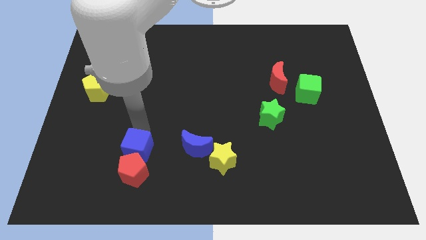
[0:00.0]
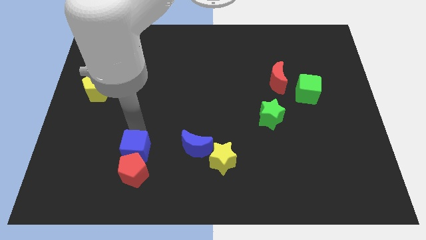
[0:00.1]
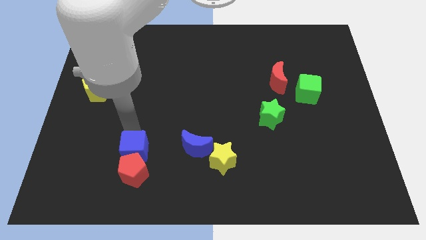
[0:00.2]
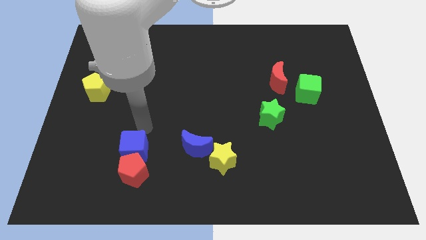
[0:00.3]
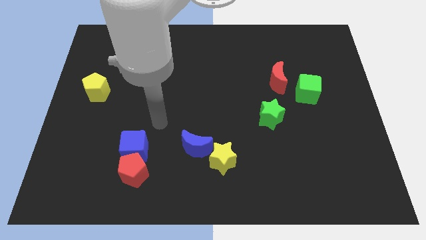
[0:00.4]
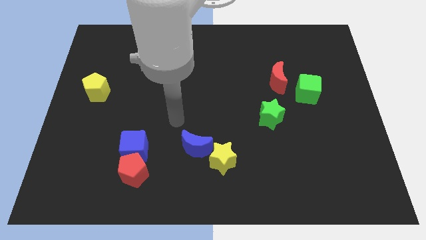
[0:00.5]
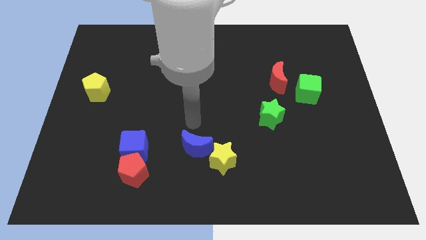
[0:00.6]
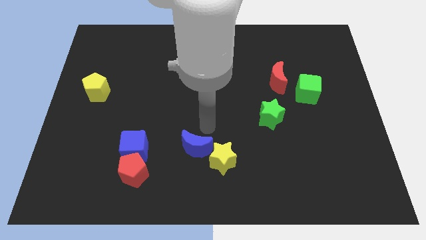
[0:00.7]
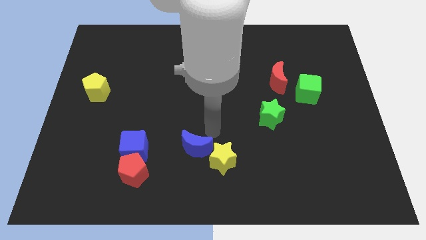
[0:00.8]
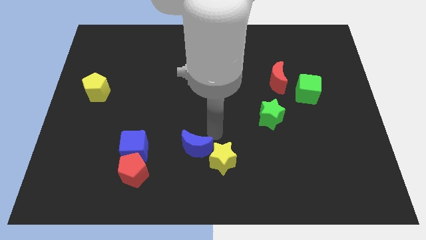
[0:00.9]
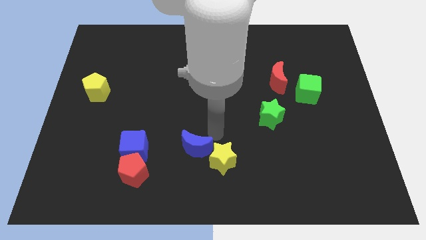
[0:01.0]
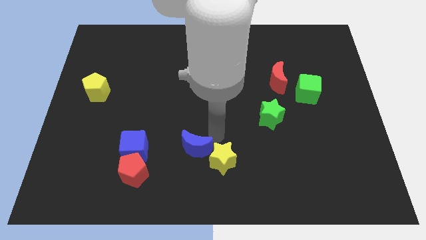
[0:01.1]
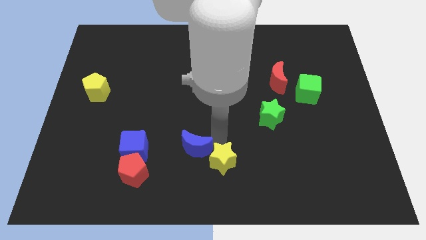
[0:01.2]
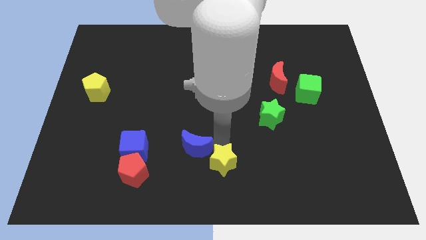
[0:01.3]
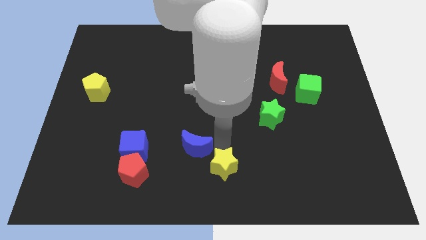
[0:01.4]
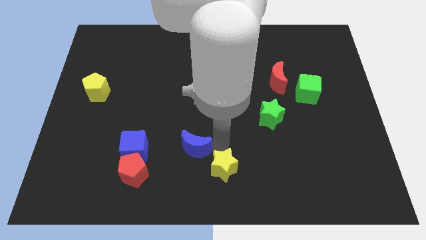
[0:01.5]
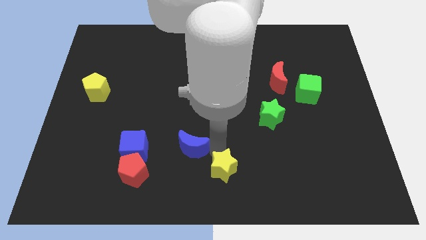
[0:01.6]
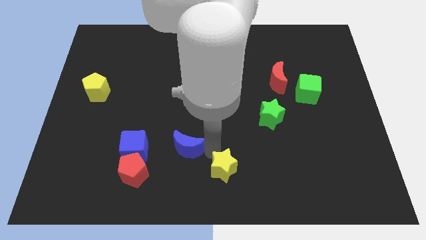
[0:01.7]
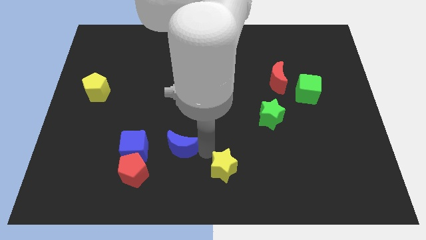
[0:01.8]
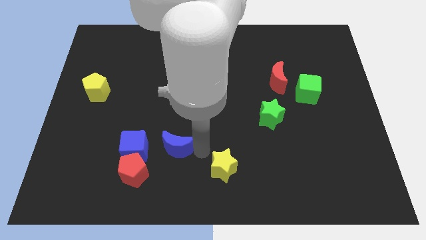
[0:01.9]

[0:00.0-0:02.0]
slightly push blue crescent to the left

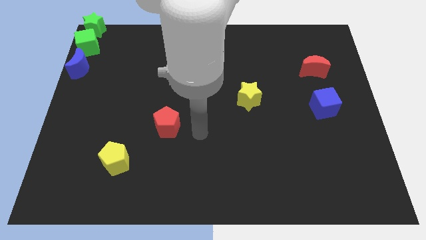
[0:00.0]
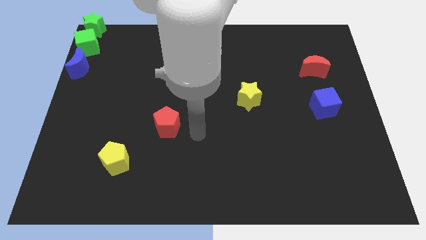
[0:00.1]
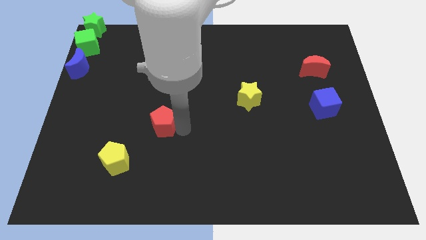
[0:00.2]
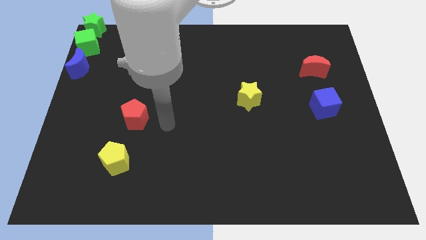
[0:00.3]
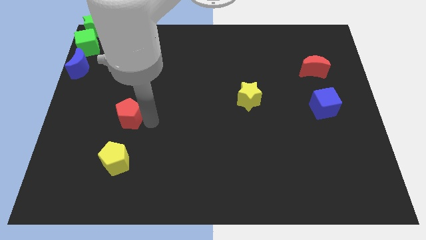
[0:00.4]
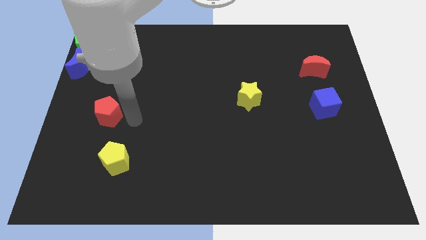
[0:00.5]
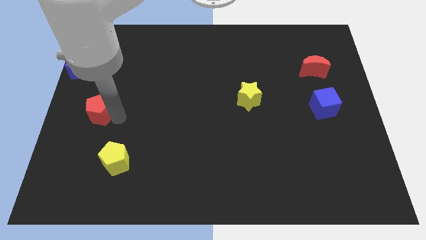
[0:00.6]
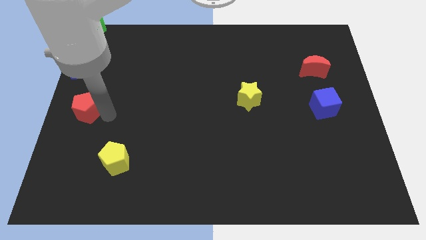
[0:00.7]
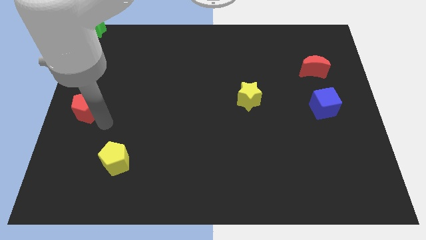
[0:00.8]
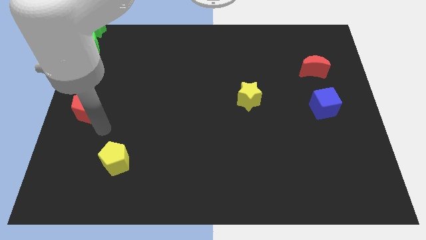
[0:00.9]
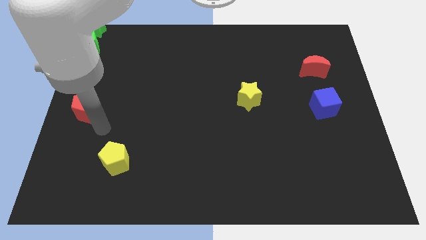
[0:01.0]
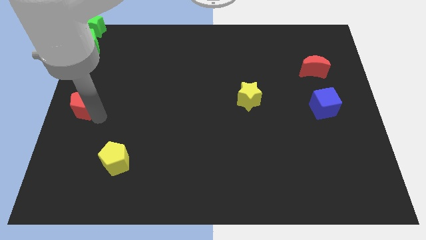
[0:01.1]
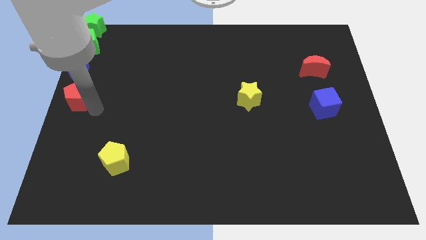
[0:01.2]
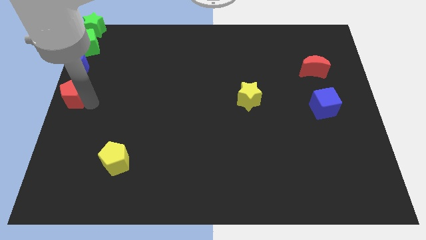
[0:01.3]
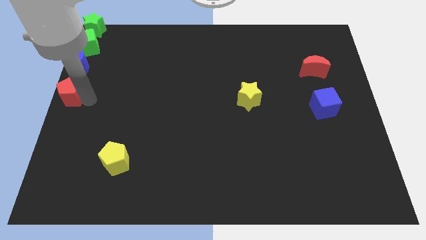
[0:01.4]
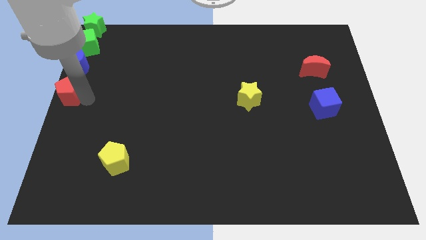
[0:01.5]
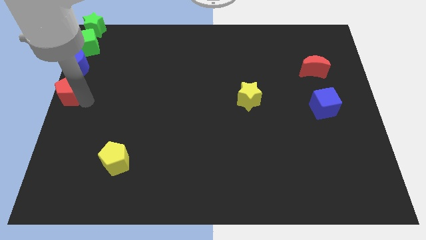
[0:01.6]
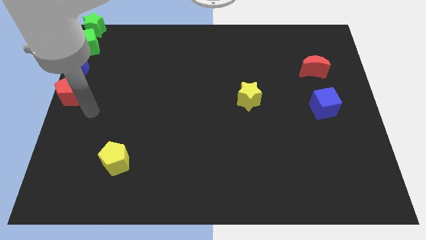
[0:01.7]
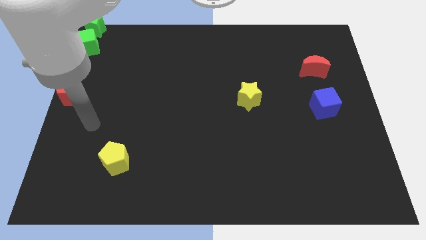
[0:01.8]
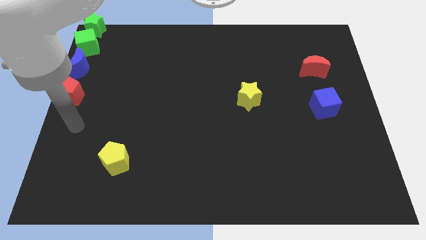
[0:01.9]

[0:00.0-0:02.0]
place the red pentagon under the blue crescent

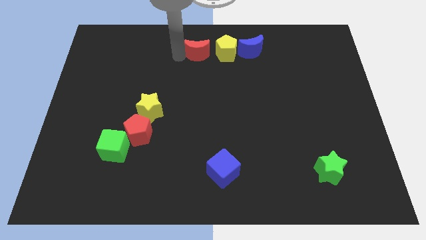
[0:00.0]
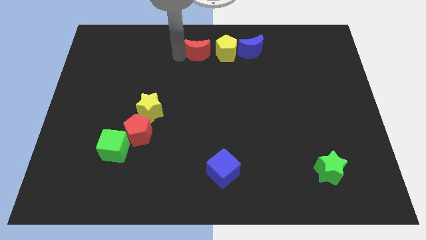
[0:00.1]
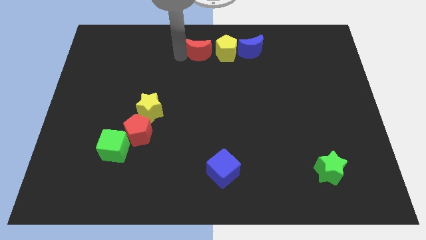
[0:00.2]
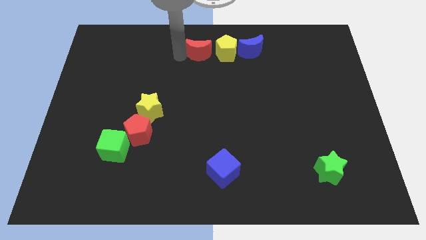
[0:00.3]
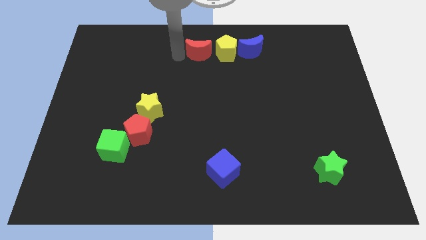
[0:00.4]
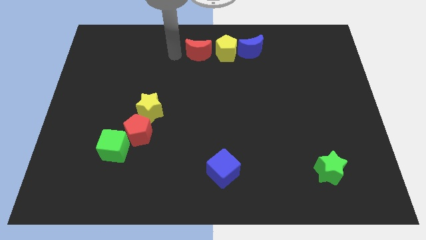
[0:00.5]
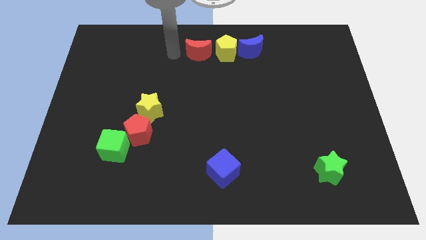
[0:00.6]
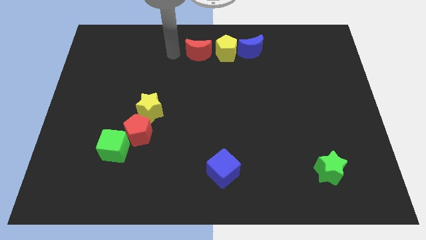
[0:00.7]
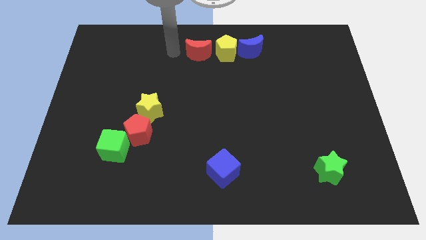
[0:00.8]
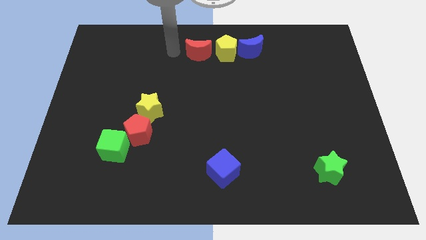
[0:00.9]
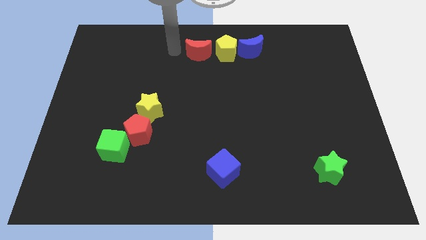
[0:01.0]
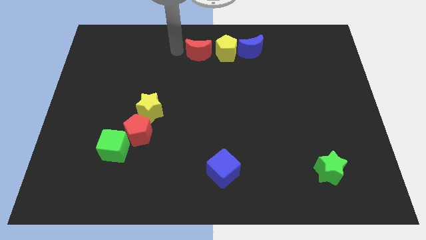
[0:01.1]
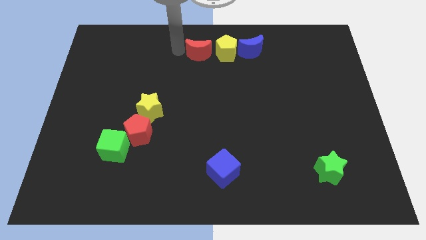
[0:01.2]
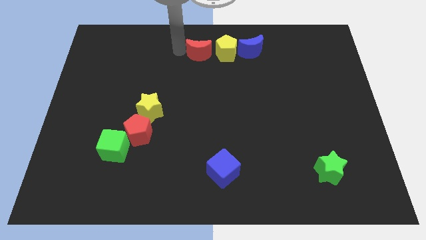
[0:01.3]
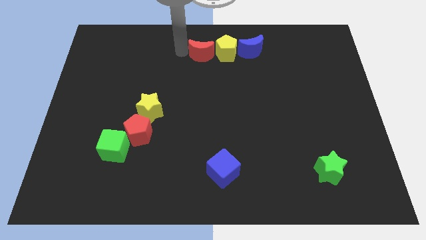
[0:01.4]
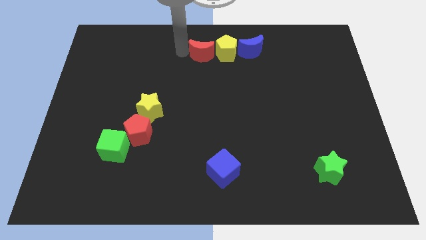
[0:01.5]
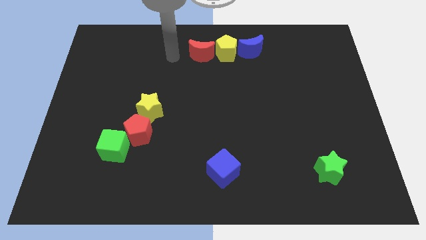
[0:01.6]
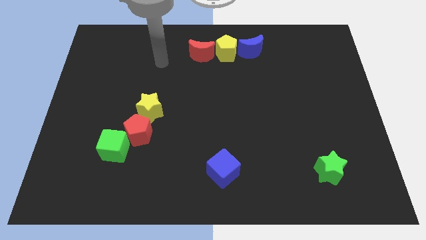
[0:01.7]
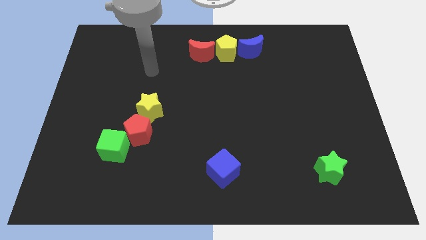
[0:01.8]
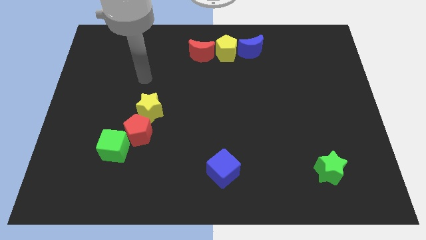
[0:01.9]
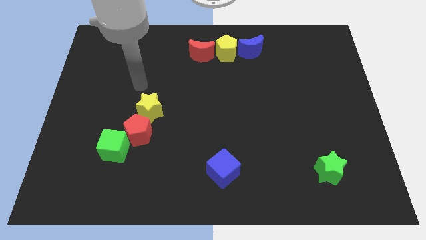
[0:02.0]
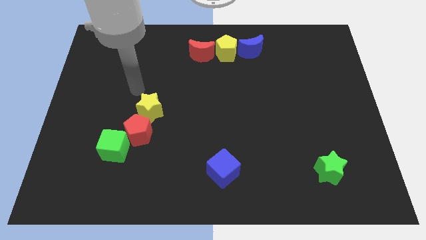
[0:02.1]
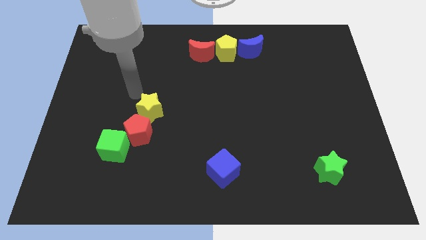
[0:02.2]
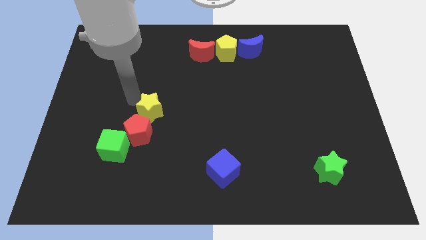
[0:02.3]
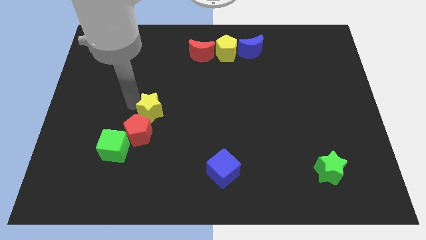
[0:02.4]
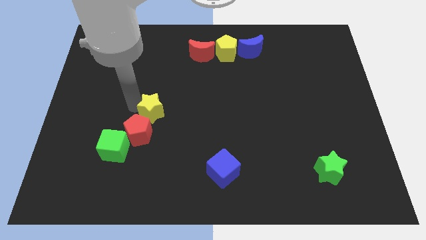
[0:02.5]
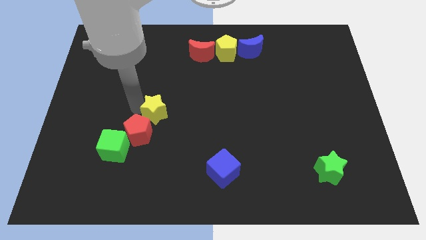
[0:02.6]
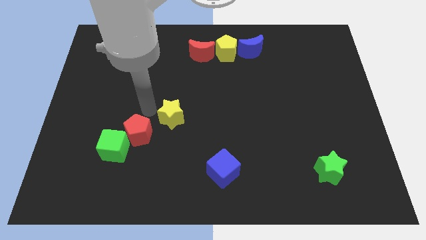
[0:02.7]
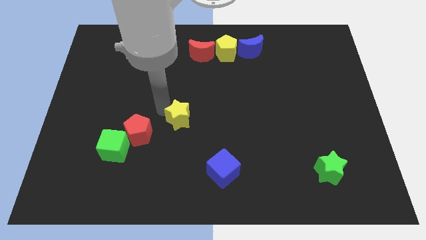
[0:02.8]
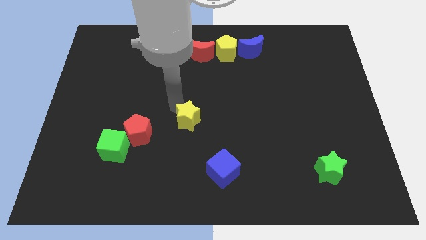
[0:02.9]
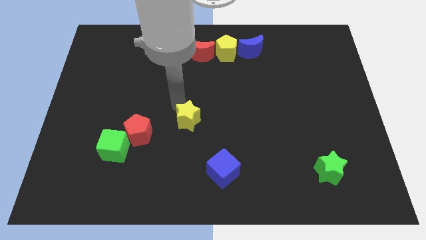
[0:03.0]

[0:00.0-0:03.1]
move the yellow star in the center

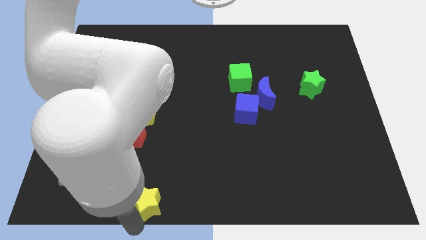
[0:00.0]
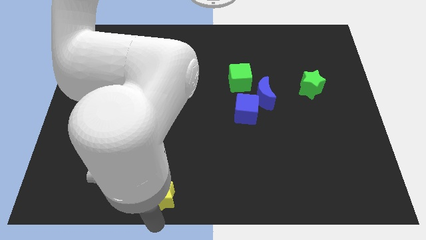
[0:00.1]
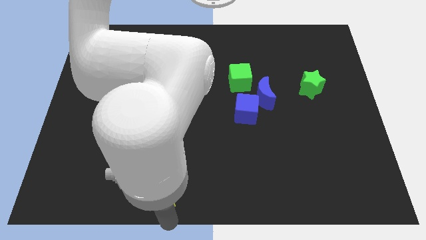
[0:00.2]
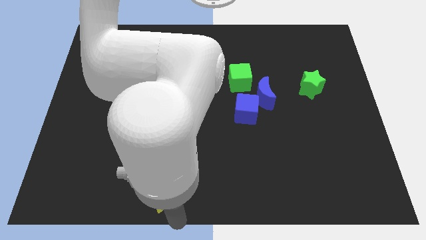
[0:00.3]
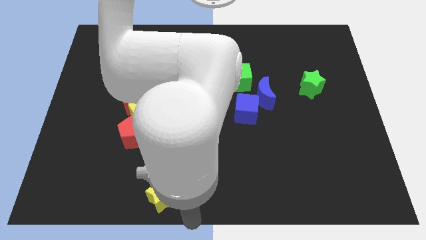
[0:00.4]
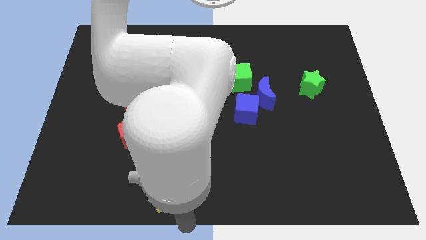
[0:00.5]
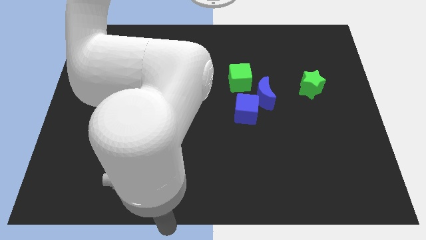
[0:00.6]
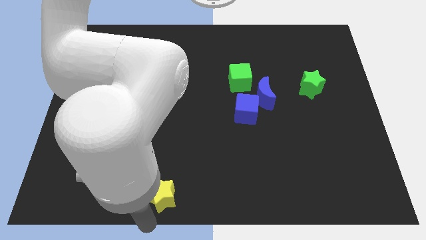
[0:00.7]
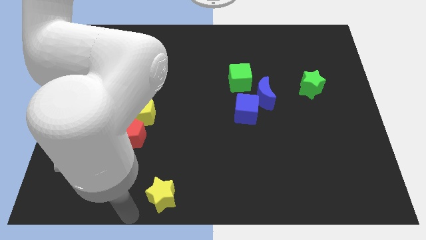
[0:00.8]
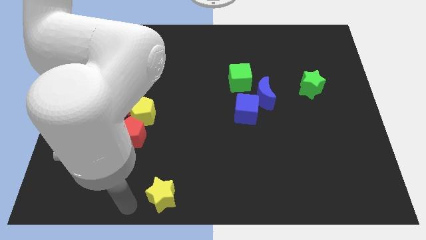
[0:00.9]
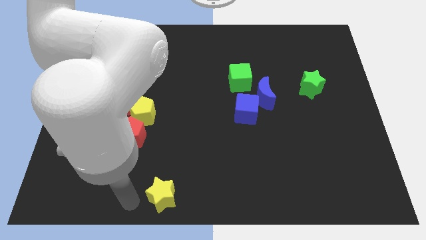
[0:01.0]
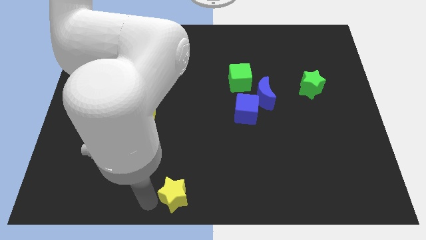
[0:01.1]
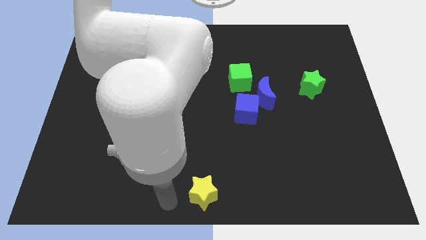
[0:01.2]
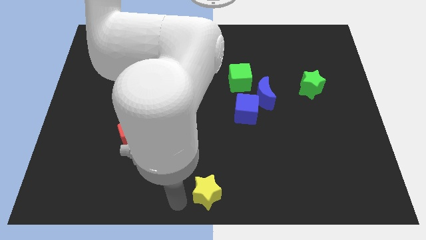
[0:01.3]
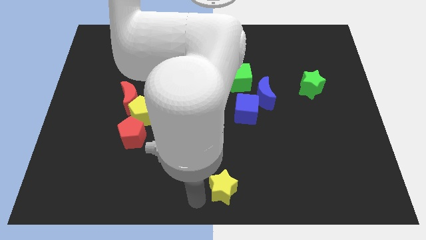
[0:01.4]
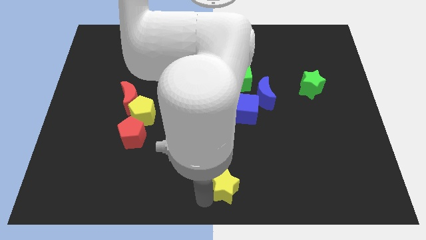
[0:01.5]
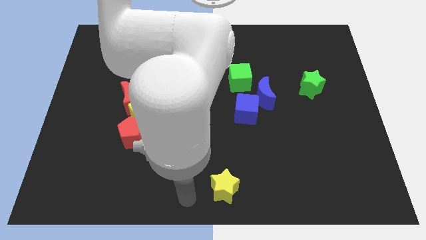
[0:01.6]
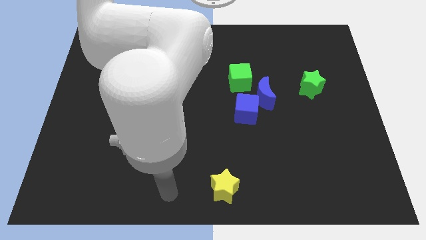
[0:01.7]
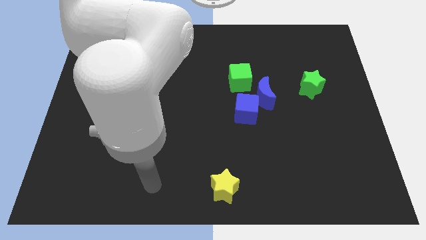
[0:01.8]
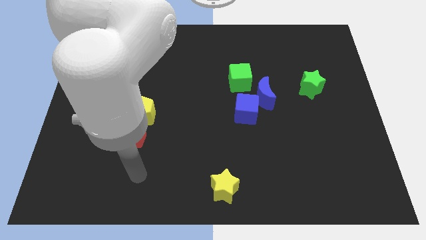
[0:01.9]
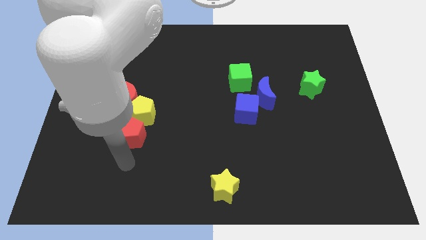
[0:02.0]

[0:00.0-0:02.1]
move the yellow star slightly to the right
